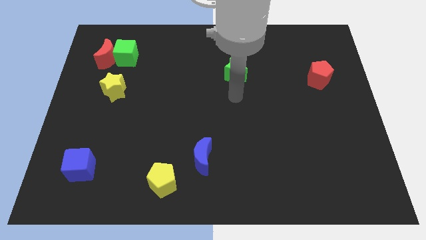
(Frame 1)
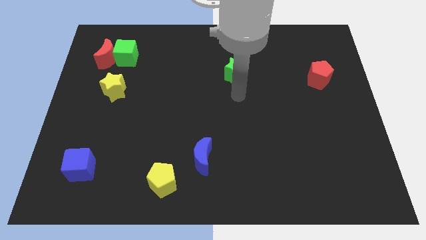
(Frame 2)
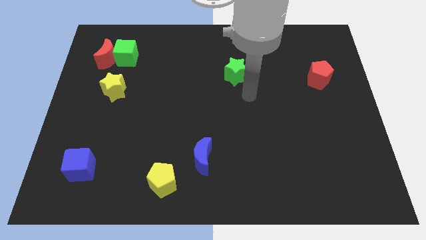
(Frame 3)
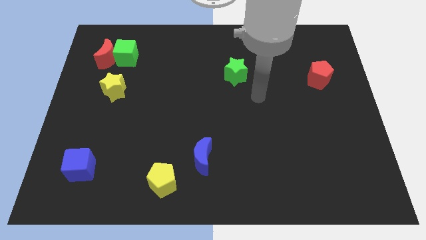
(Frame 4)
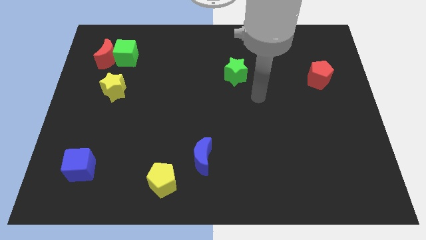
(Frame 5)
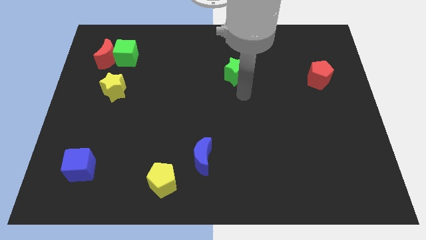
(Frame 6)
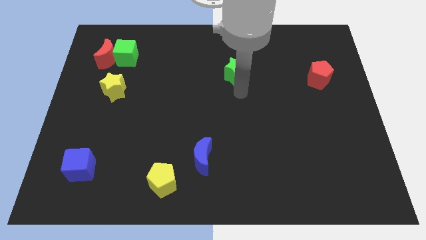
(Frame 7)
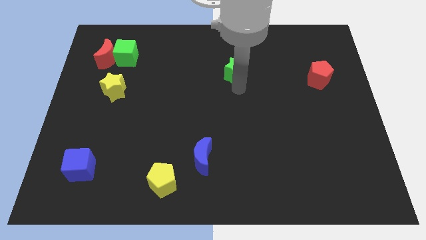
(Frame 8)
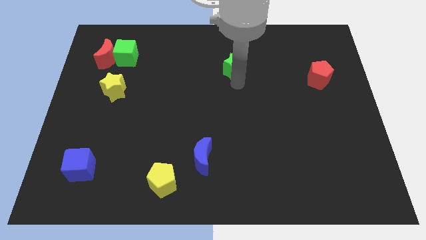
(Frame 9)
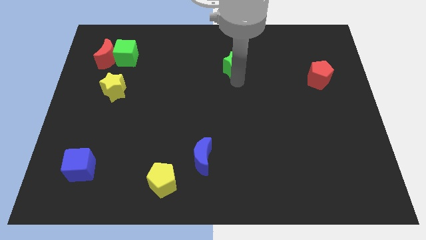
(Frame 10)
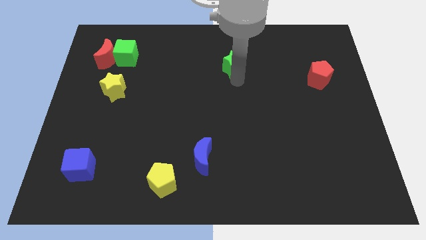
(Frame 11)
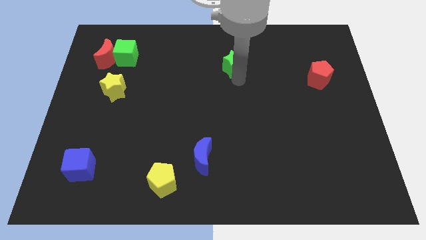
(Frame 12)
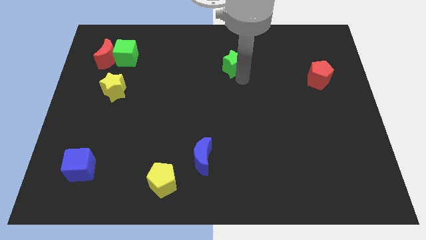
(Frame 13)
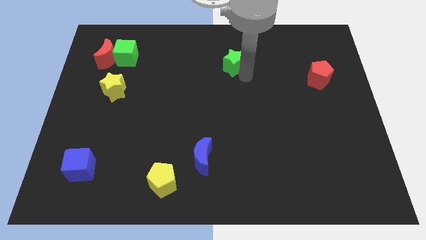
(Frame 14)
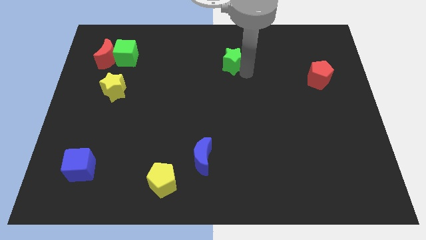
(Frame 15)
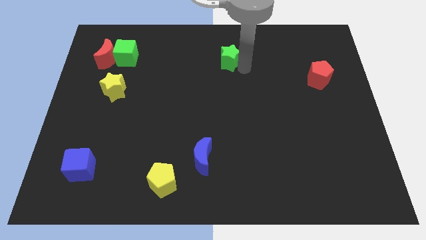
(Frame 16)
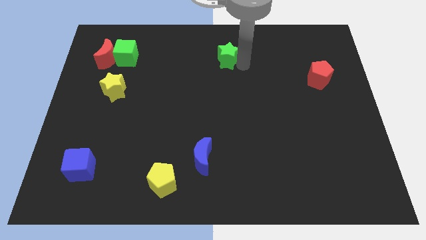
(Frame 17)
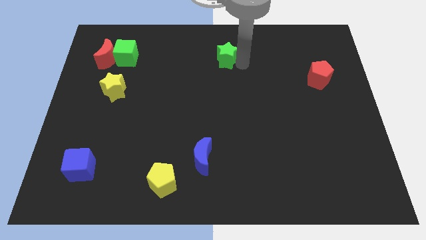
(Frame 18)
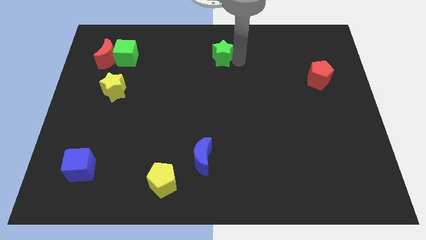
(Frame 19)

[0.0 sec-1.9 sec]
move the green star towards the top center of the board

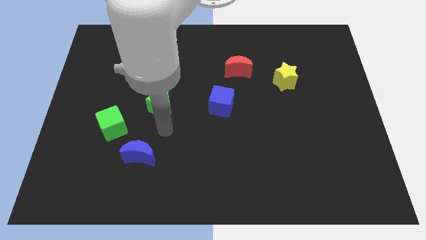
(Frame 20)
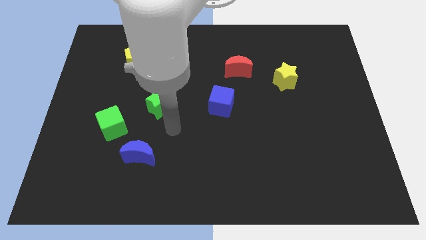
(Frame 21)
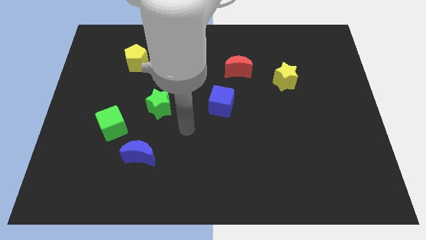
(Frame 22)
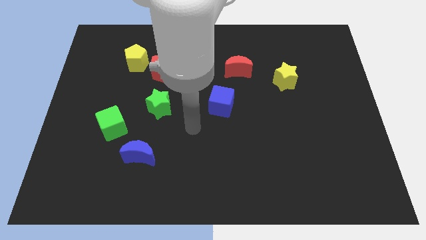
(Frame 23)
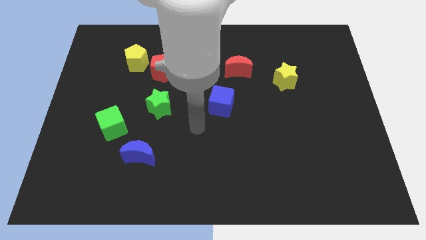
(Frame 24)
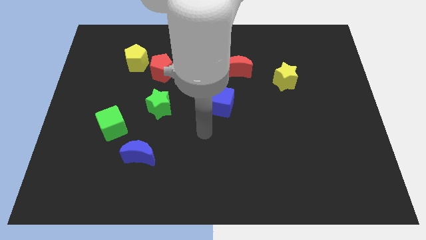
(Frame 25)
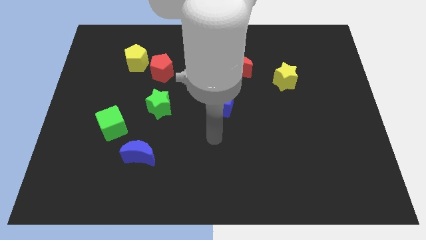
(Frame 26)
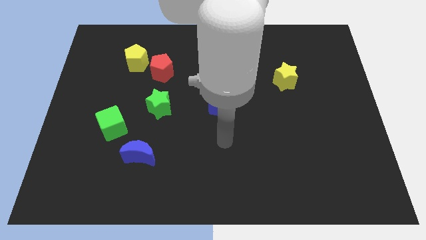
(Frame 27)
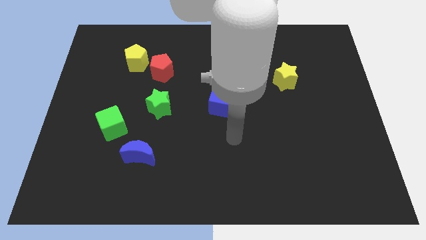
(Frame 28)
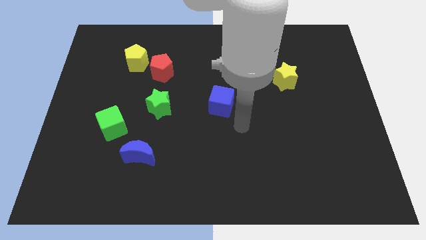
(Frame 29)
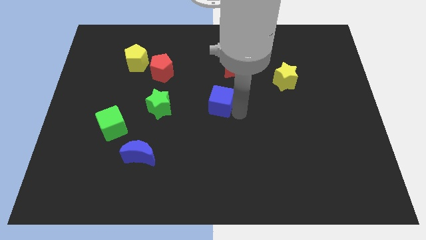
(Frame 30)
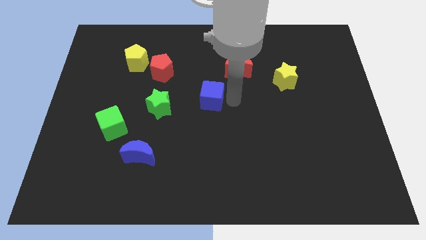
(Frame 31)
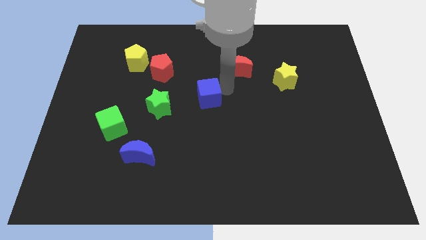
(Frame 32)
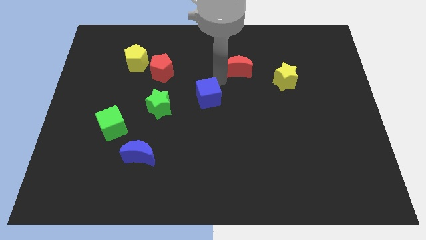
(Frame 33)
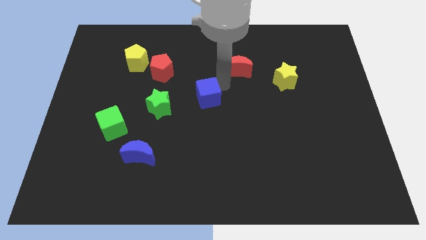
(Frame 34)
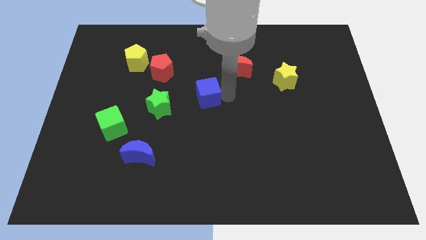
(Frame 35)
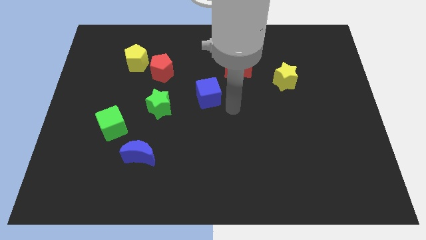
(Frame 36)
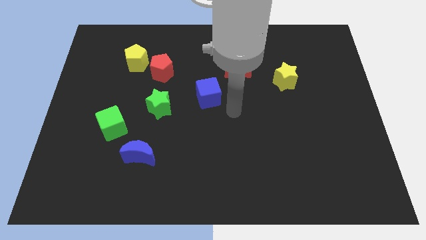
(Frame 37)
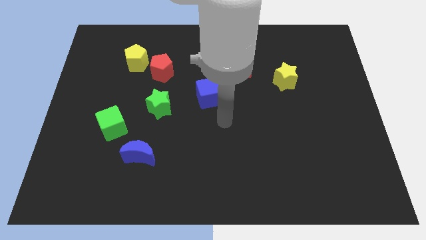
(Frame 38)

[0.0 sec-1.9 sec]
push the blue cube to the centre of the board
